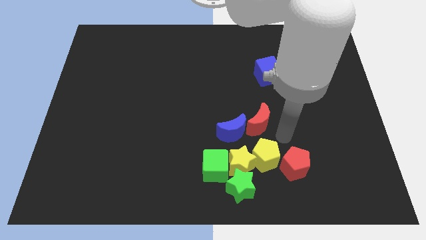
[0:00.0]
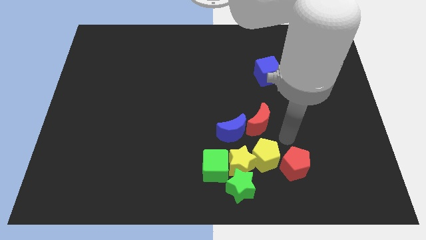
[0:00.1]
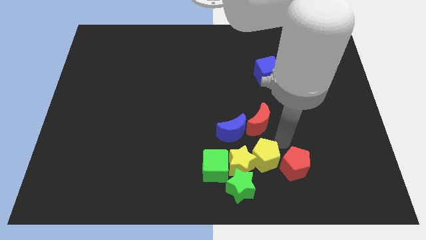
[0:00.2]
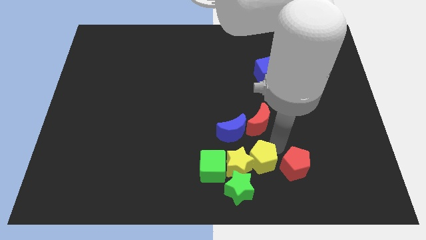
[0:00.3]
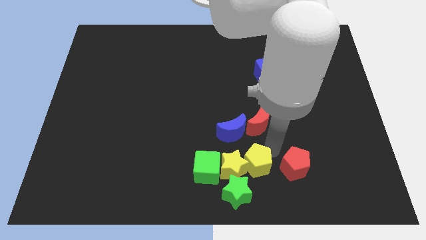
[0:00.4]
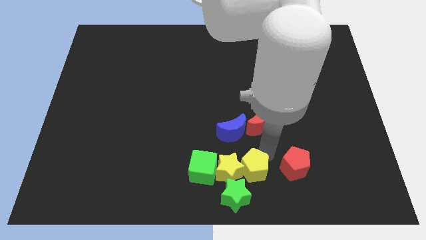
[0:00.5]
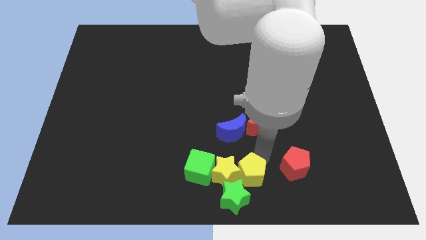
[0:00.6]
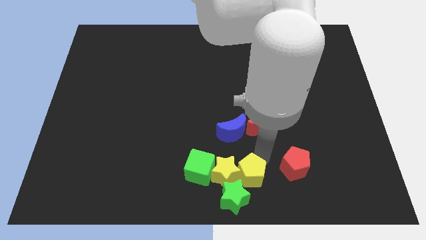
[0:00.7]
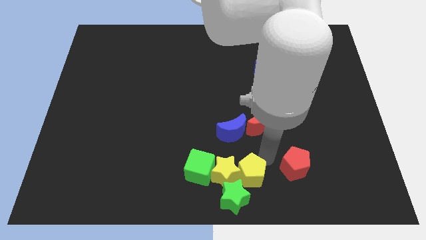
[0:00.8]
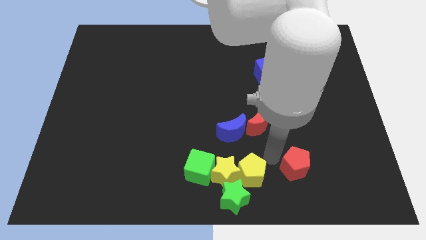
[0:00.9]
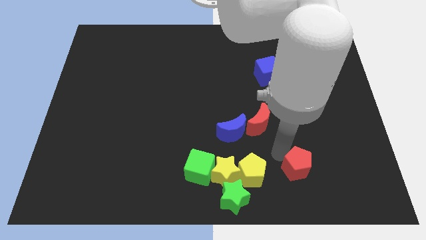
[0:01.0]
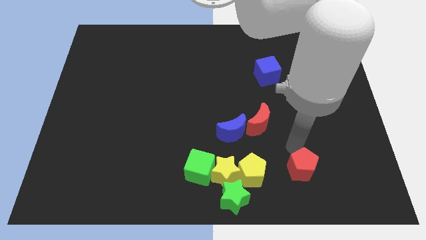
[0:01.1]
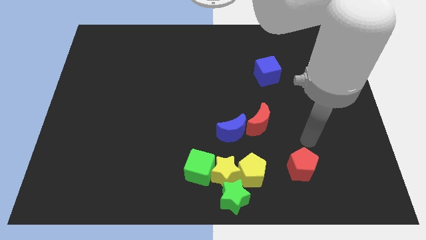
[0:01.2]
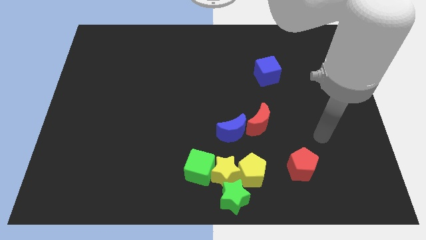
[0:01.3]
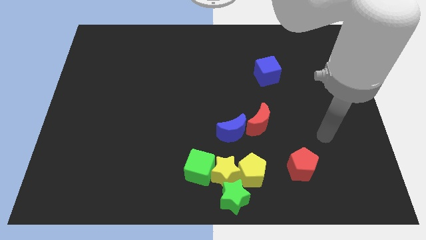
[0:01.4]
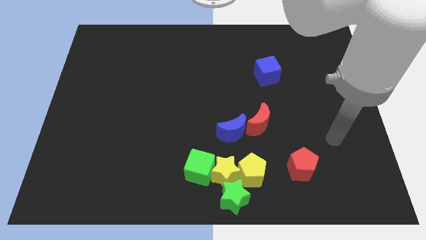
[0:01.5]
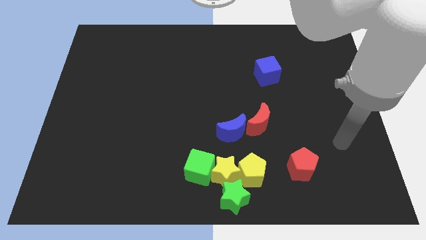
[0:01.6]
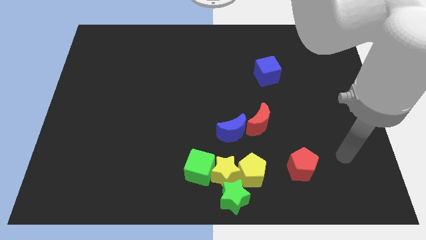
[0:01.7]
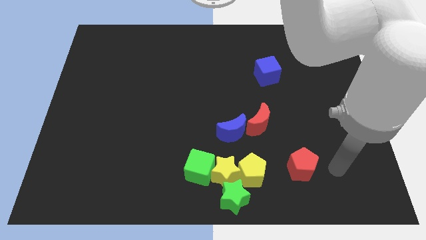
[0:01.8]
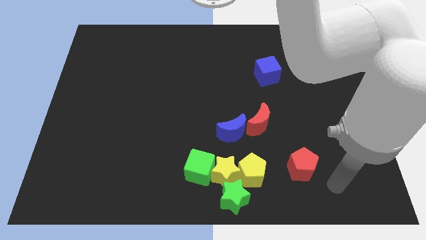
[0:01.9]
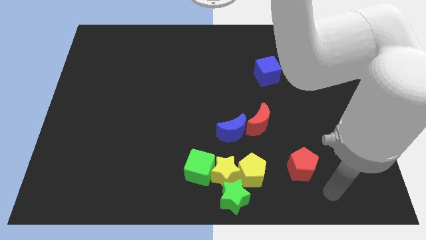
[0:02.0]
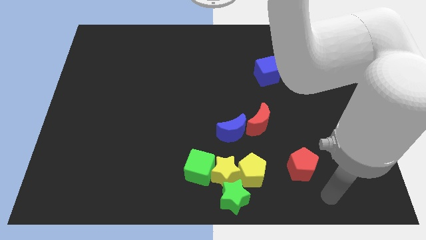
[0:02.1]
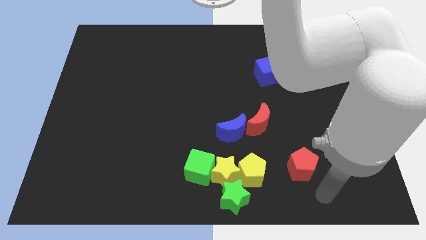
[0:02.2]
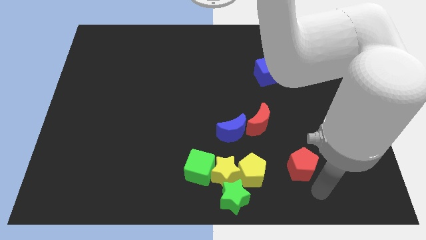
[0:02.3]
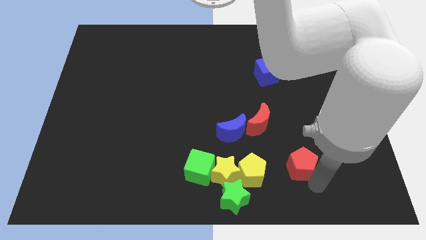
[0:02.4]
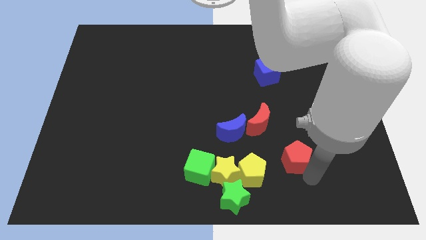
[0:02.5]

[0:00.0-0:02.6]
move your arm away from group of blocks

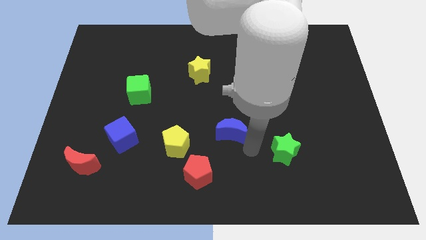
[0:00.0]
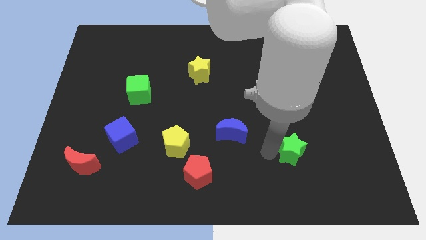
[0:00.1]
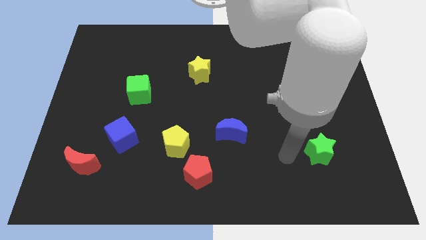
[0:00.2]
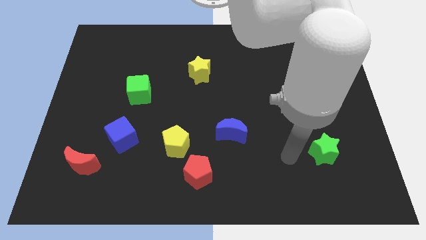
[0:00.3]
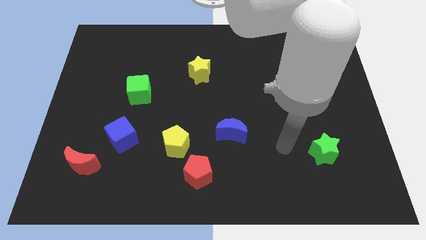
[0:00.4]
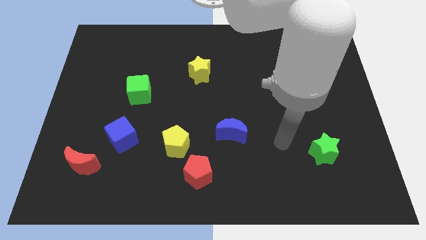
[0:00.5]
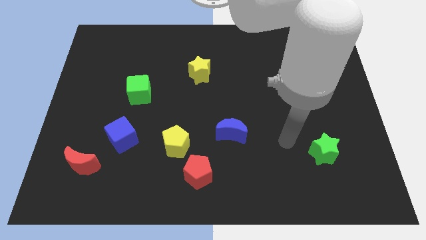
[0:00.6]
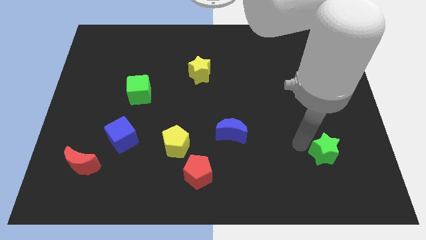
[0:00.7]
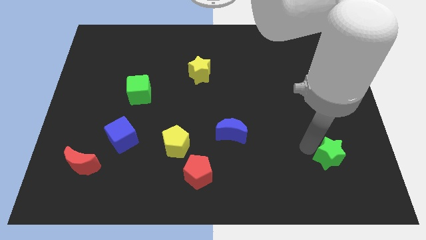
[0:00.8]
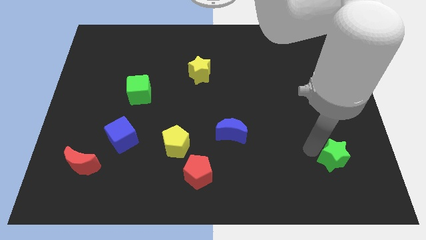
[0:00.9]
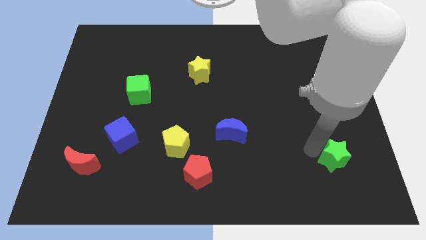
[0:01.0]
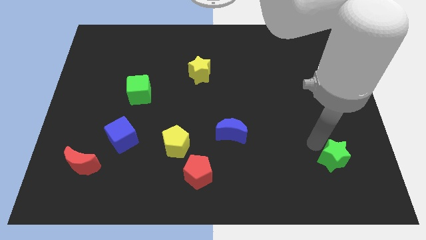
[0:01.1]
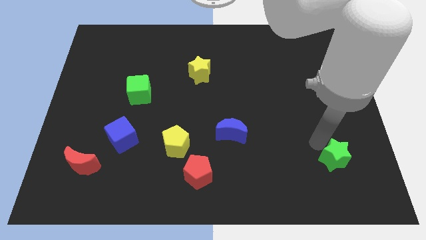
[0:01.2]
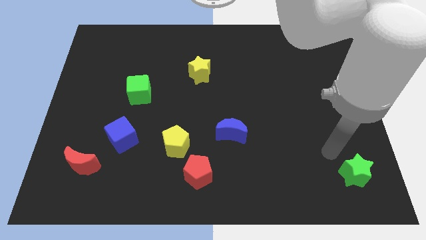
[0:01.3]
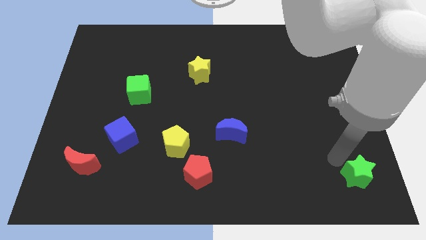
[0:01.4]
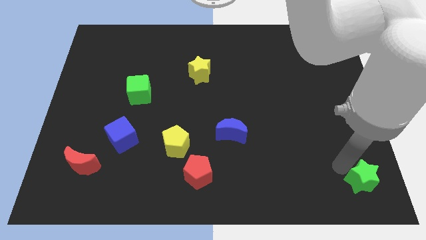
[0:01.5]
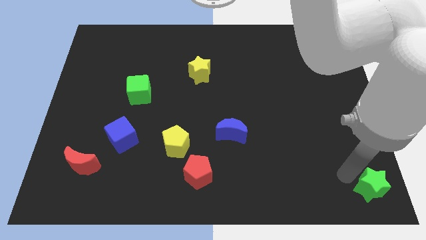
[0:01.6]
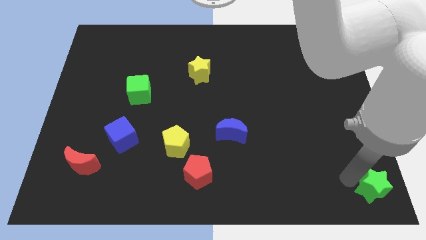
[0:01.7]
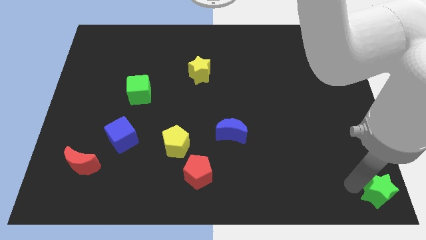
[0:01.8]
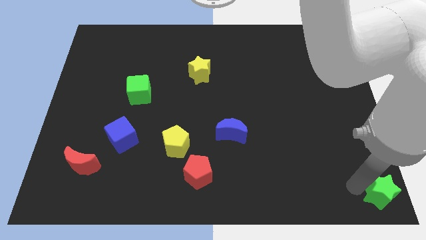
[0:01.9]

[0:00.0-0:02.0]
push the green star towards the bottom right corner of the board

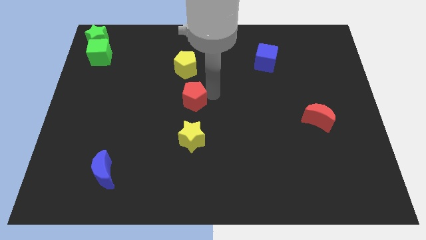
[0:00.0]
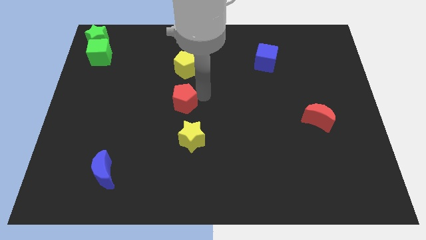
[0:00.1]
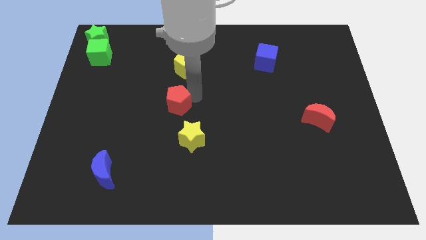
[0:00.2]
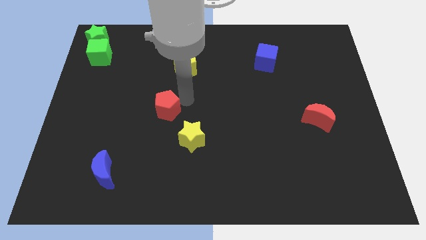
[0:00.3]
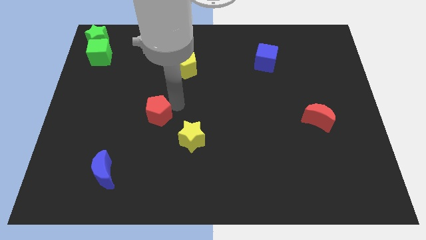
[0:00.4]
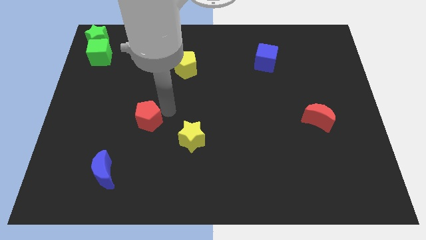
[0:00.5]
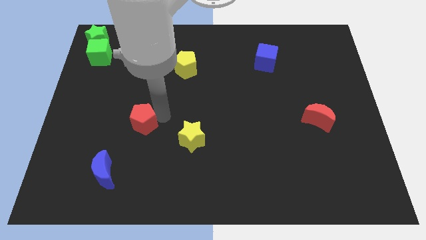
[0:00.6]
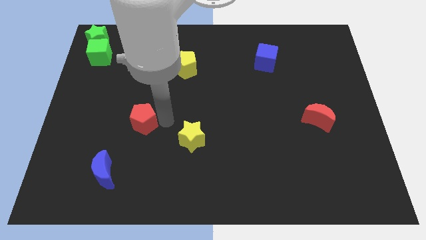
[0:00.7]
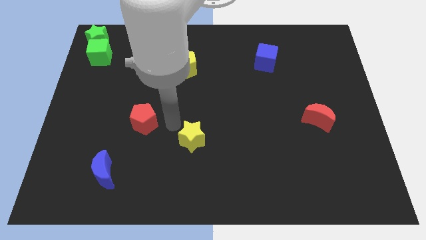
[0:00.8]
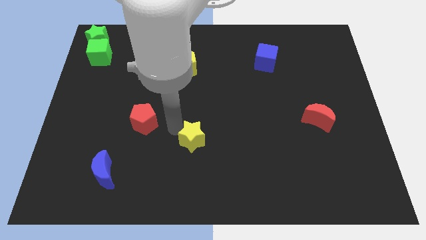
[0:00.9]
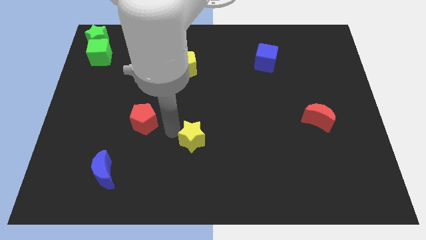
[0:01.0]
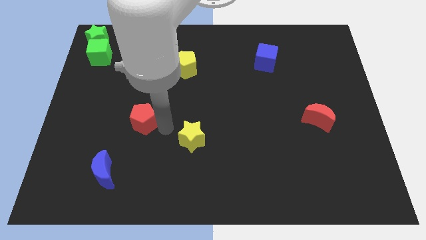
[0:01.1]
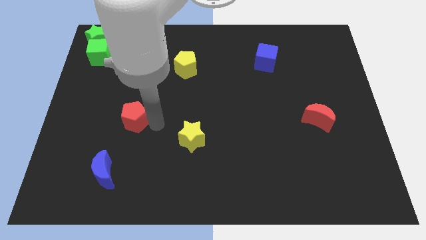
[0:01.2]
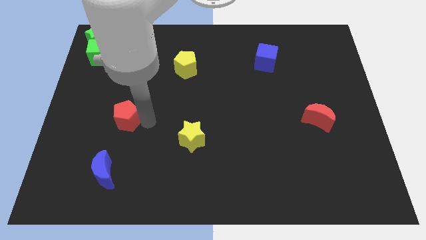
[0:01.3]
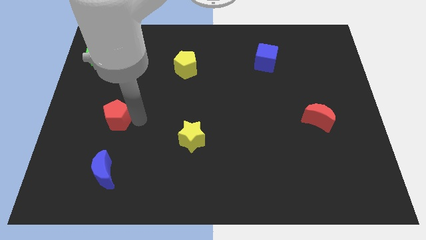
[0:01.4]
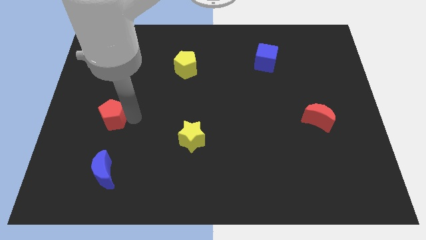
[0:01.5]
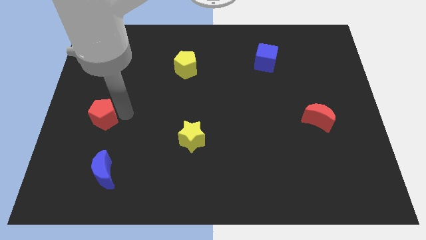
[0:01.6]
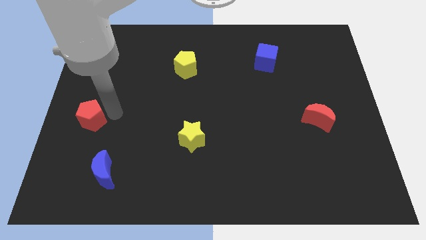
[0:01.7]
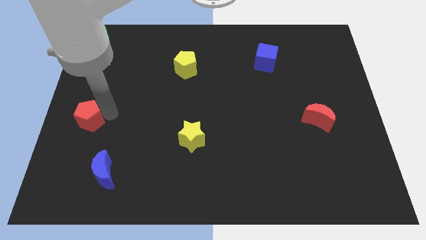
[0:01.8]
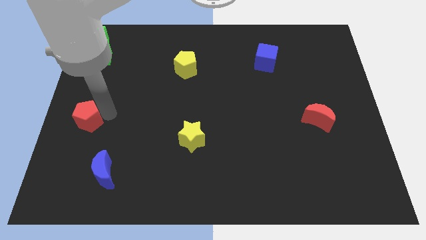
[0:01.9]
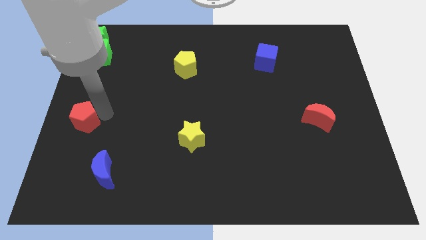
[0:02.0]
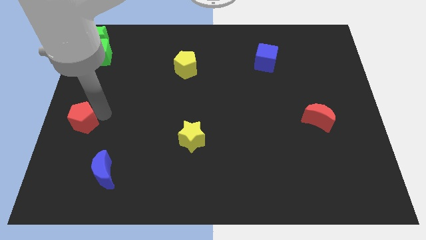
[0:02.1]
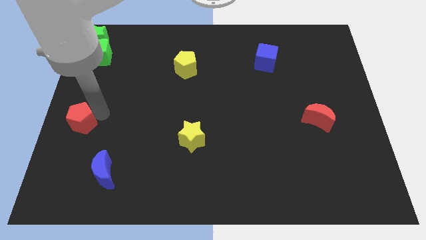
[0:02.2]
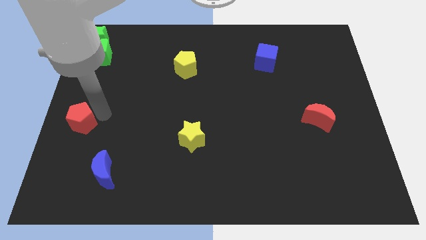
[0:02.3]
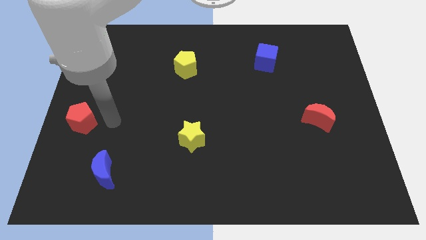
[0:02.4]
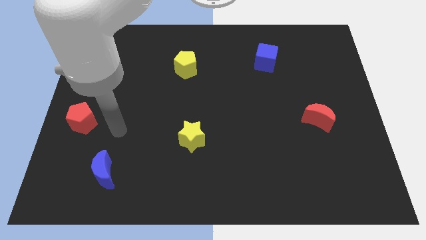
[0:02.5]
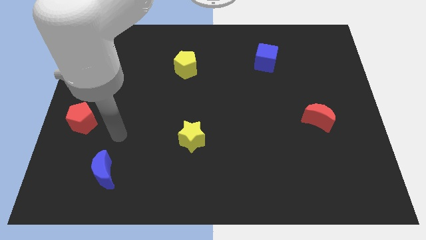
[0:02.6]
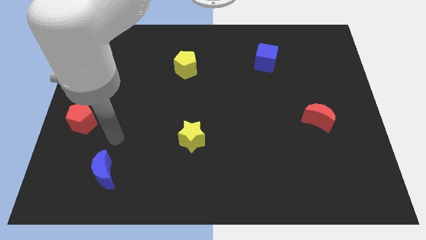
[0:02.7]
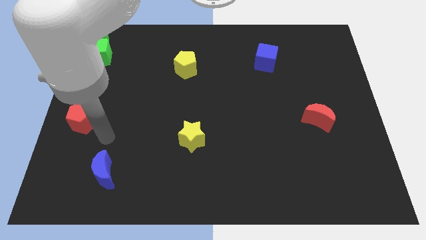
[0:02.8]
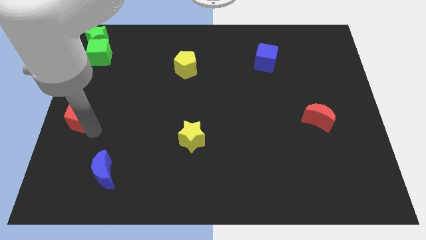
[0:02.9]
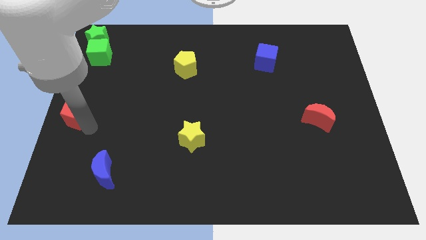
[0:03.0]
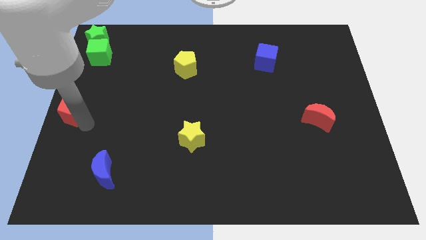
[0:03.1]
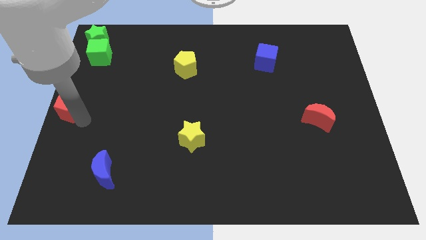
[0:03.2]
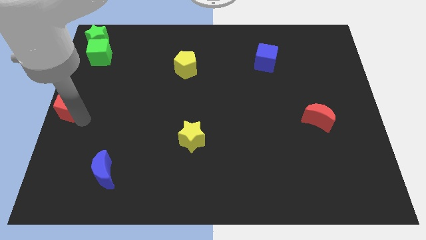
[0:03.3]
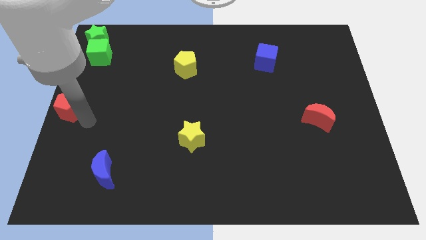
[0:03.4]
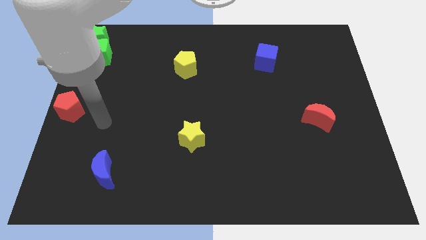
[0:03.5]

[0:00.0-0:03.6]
push the red pentagon to the left center of the board

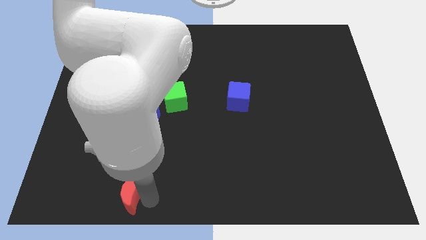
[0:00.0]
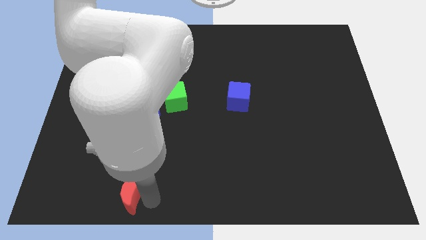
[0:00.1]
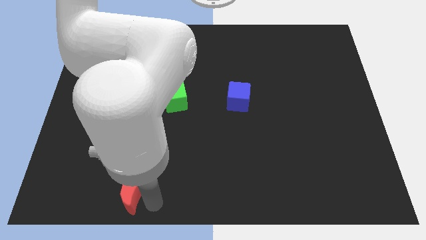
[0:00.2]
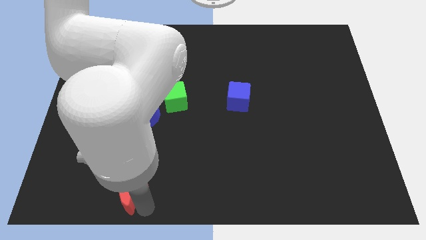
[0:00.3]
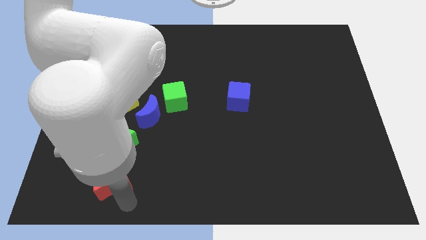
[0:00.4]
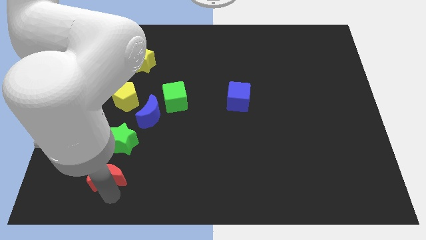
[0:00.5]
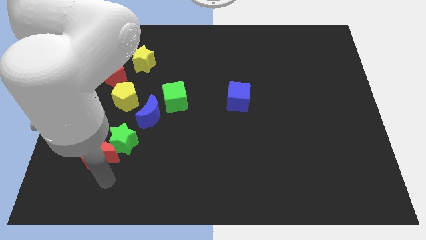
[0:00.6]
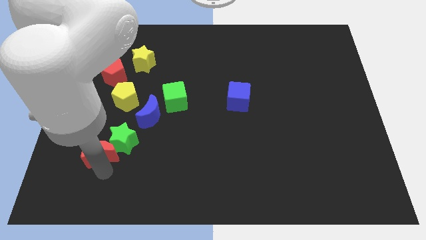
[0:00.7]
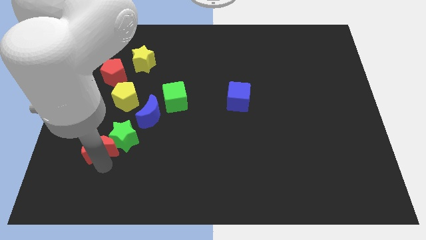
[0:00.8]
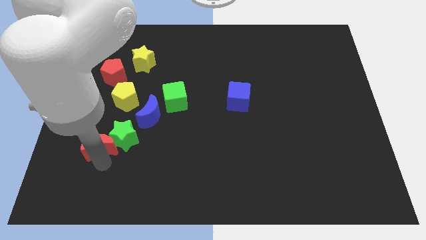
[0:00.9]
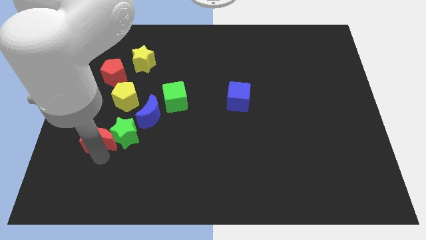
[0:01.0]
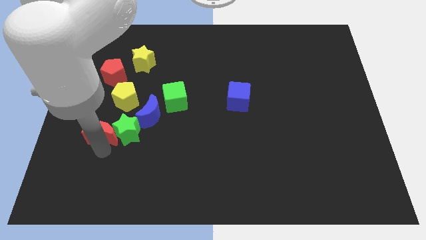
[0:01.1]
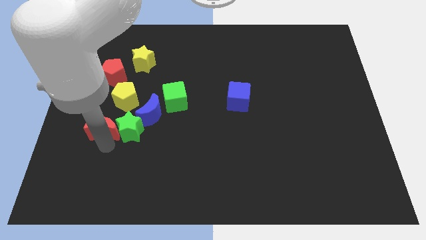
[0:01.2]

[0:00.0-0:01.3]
move the red crescent into the green star
